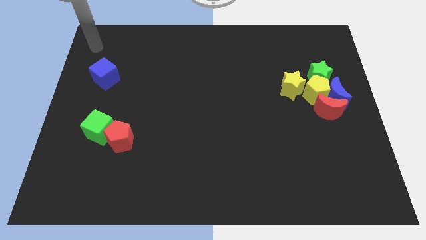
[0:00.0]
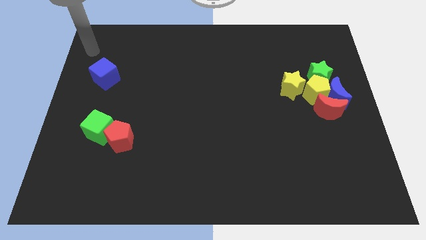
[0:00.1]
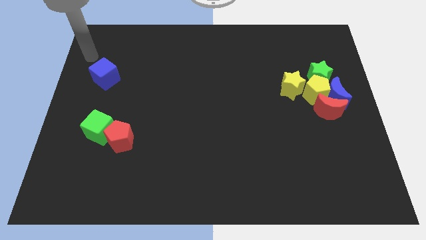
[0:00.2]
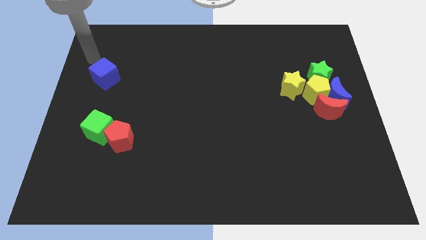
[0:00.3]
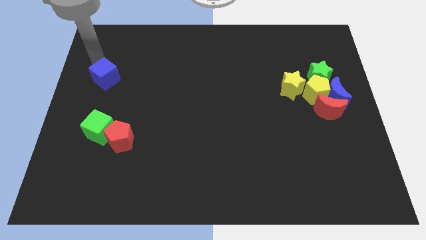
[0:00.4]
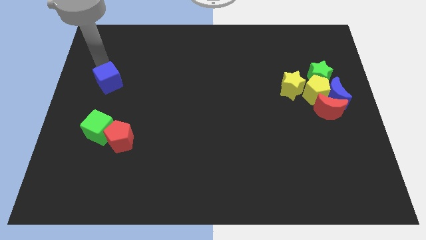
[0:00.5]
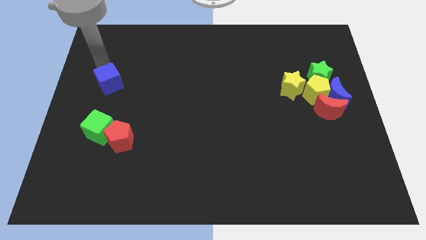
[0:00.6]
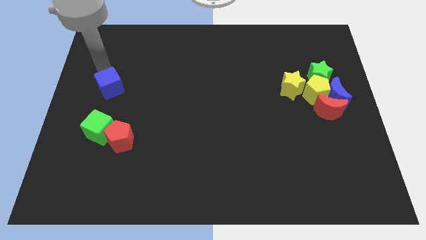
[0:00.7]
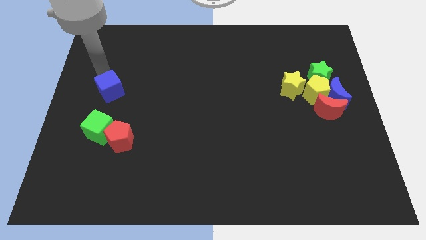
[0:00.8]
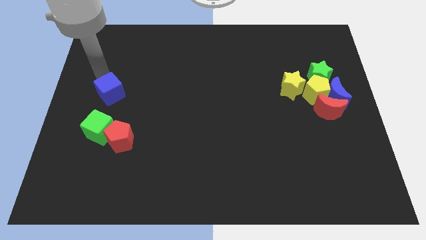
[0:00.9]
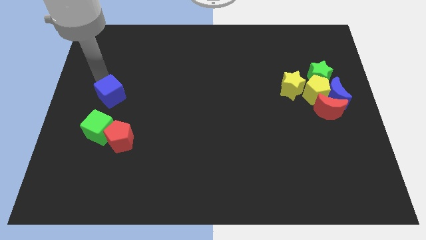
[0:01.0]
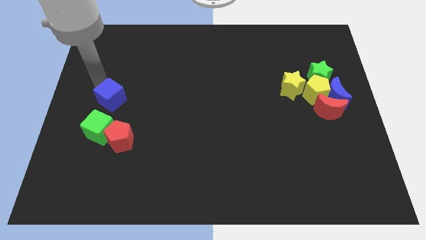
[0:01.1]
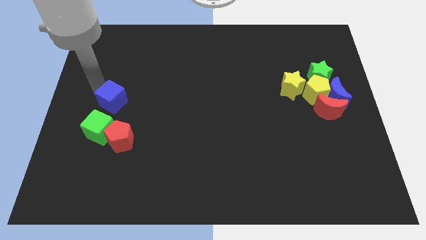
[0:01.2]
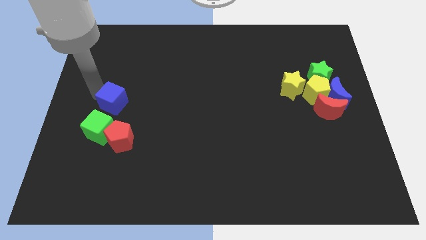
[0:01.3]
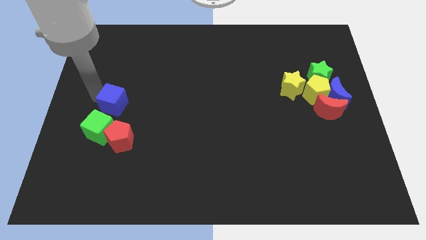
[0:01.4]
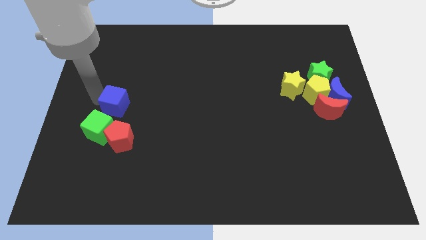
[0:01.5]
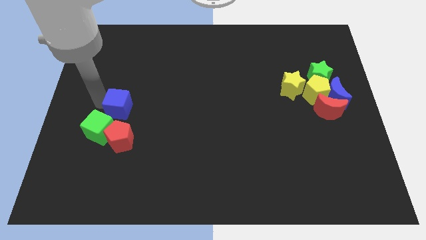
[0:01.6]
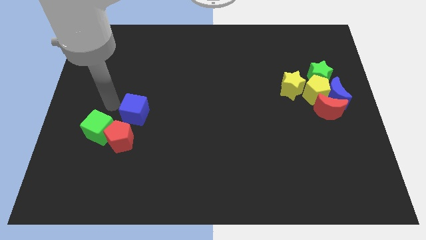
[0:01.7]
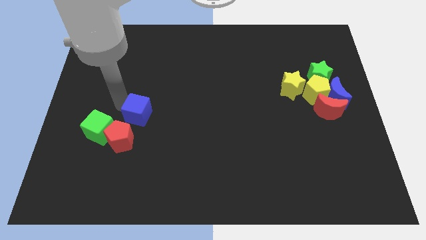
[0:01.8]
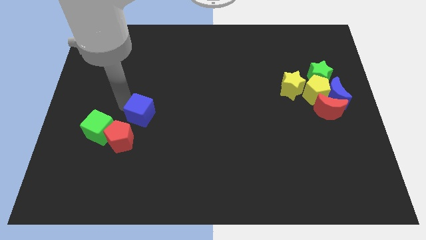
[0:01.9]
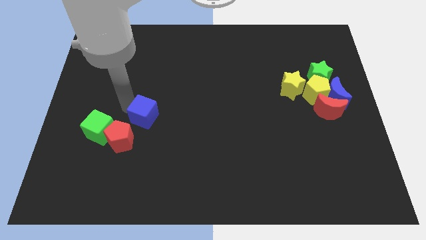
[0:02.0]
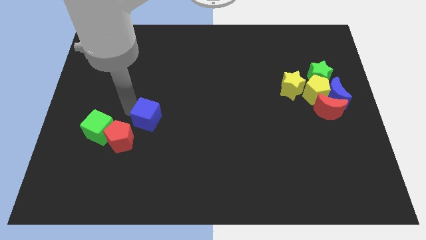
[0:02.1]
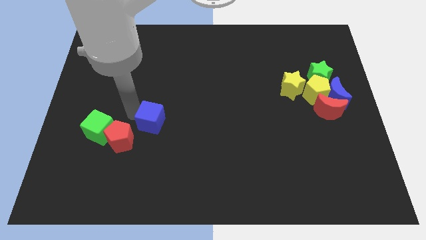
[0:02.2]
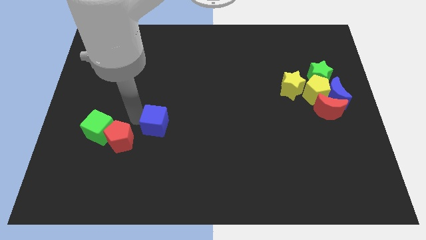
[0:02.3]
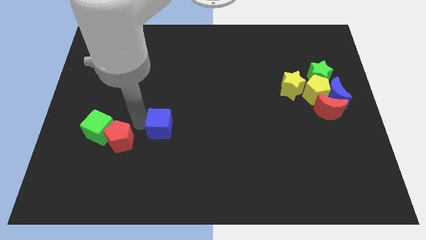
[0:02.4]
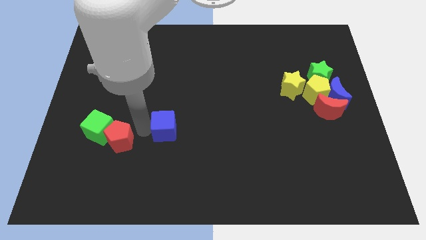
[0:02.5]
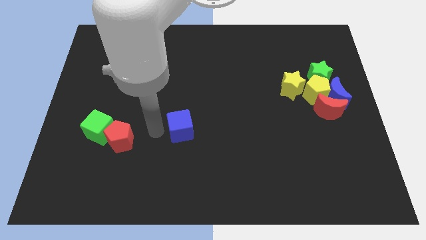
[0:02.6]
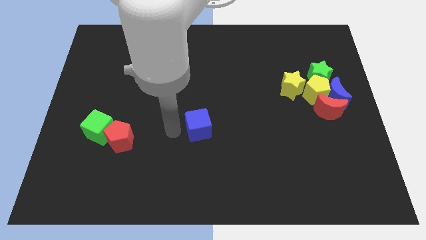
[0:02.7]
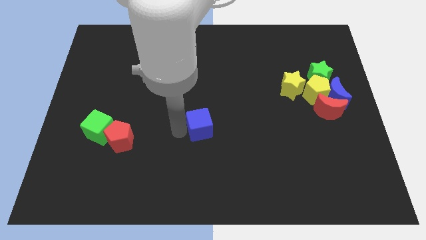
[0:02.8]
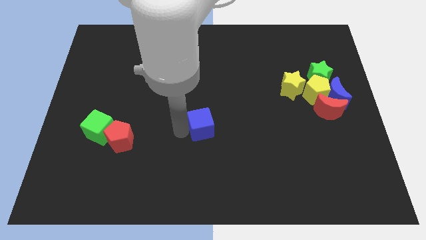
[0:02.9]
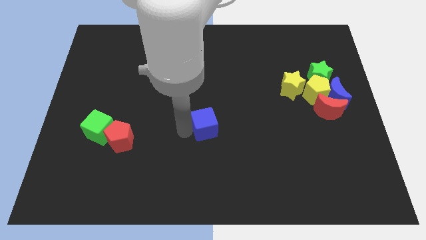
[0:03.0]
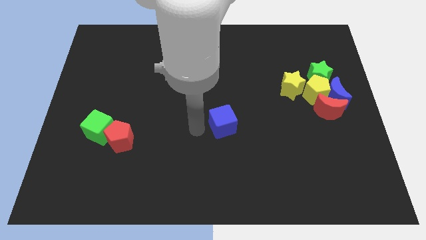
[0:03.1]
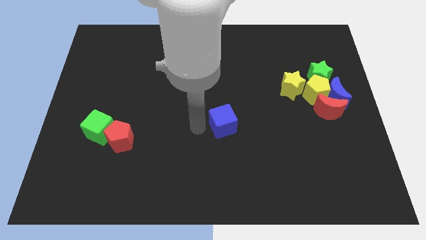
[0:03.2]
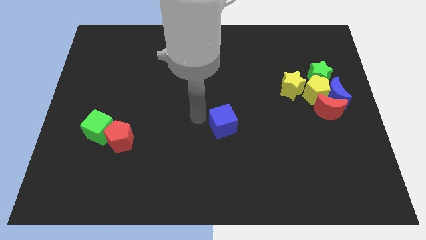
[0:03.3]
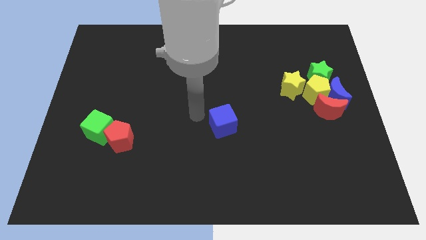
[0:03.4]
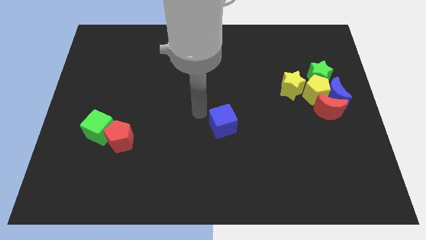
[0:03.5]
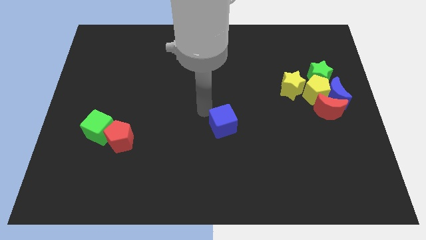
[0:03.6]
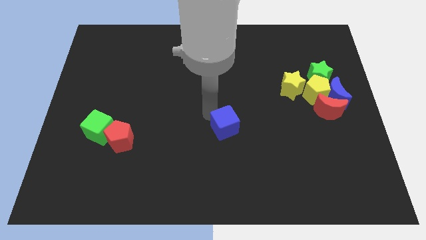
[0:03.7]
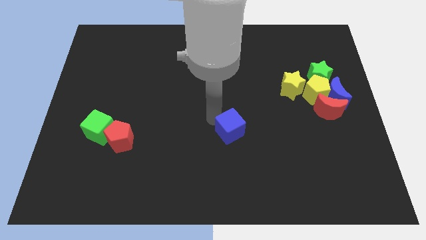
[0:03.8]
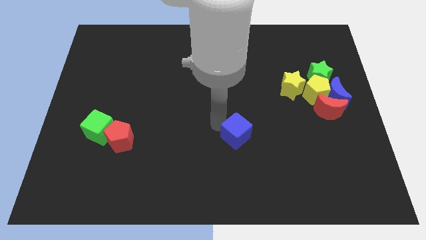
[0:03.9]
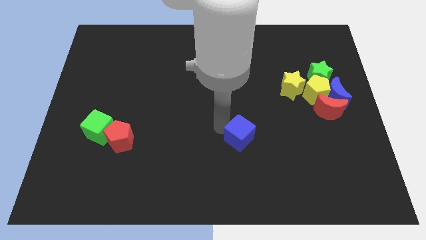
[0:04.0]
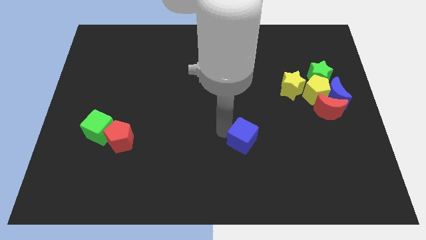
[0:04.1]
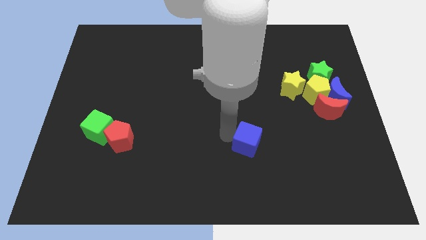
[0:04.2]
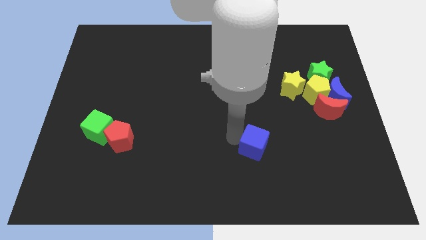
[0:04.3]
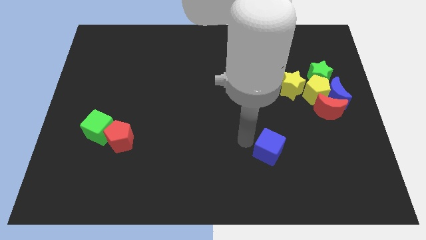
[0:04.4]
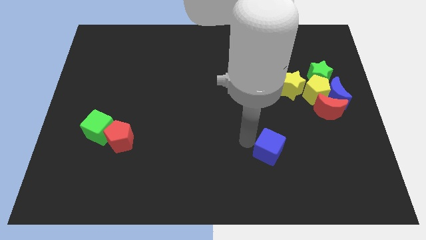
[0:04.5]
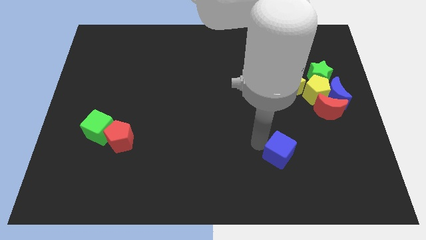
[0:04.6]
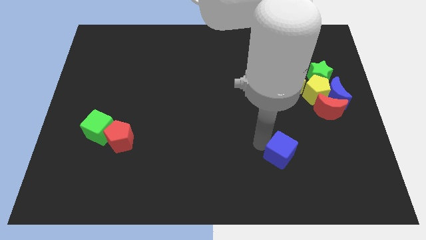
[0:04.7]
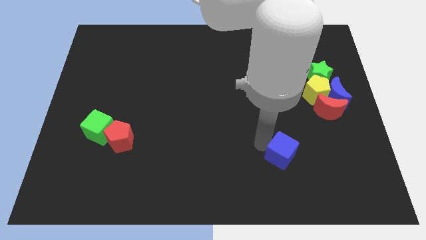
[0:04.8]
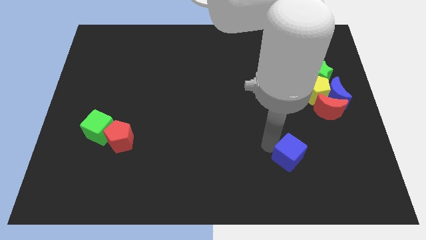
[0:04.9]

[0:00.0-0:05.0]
move the blue cube to the bottom side of the grou pof blocks

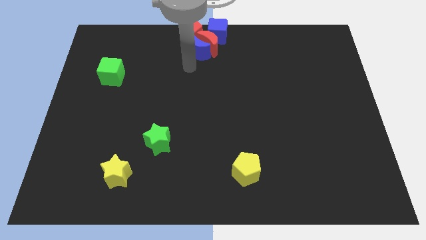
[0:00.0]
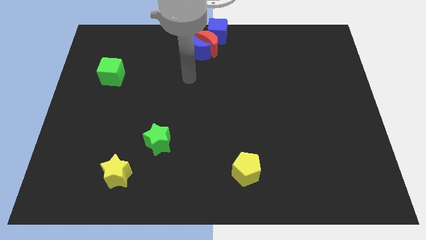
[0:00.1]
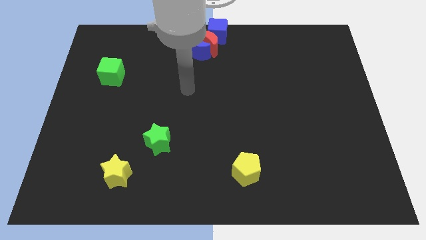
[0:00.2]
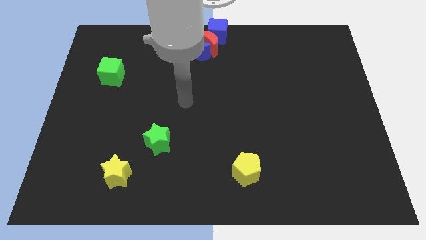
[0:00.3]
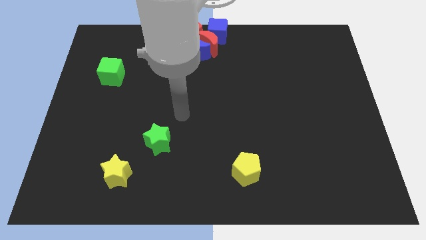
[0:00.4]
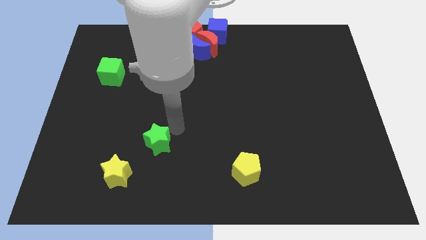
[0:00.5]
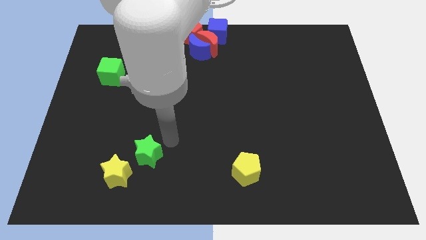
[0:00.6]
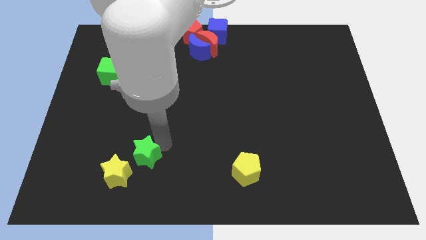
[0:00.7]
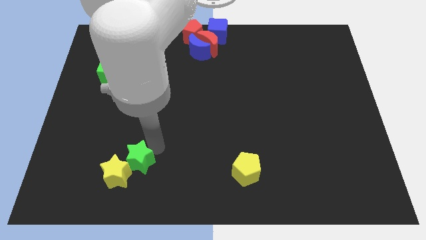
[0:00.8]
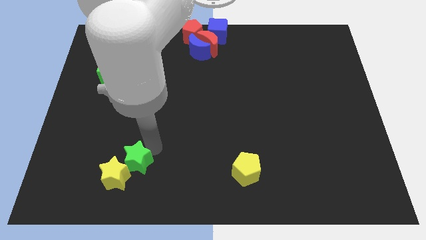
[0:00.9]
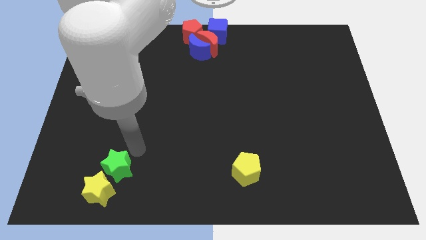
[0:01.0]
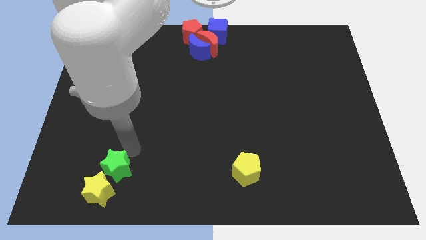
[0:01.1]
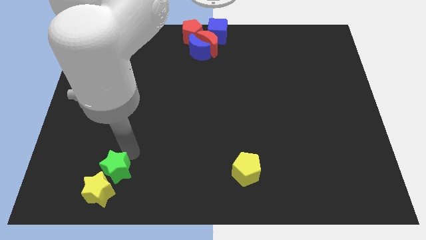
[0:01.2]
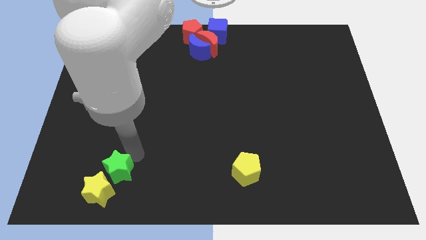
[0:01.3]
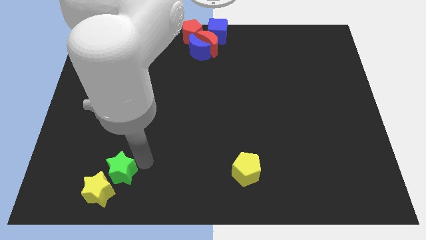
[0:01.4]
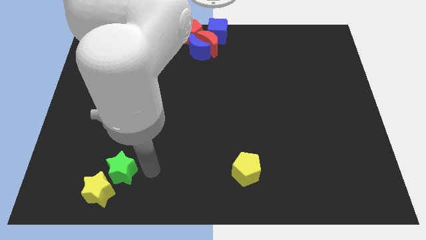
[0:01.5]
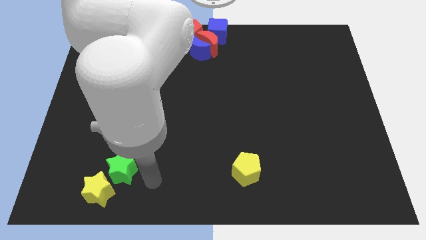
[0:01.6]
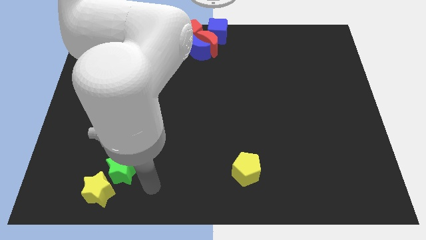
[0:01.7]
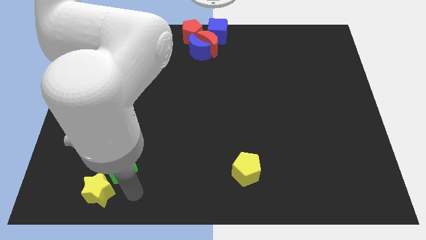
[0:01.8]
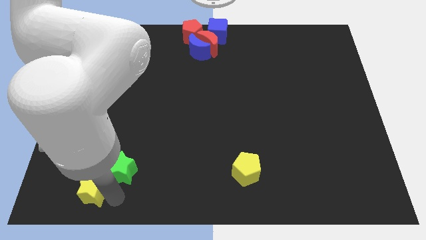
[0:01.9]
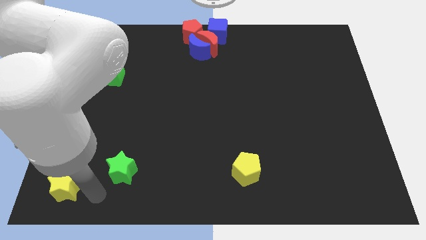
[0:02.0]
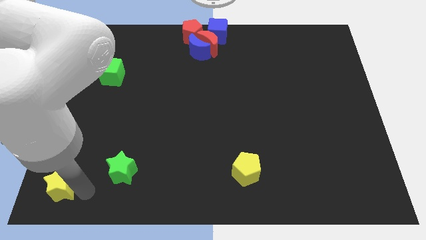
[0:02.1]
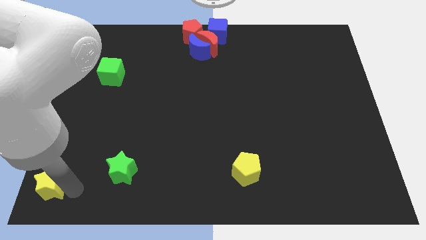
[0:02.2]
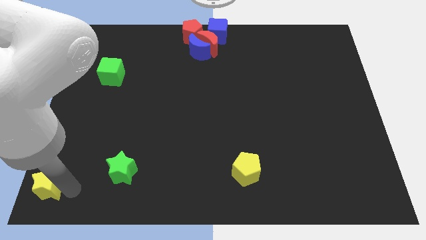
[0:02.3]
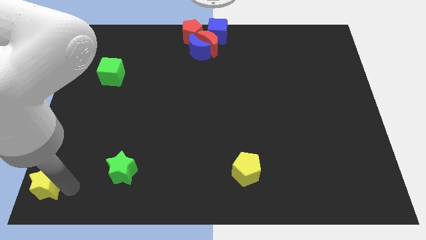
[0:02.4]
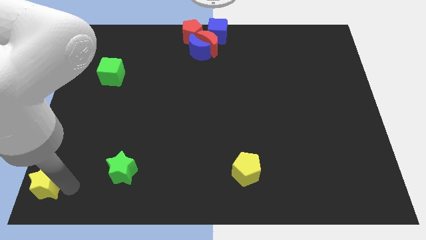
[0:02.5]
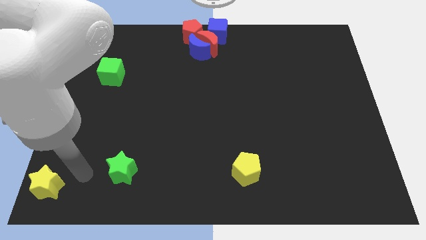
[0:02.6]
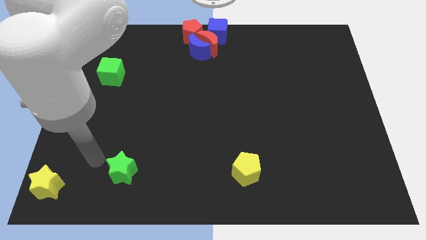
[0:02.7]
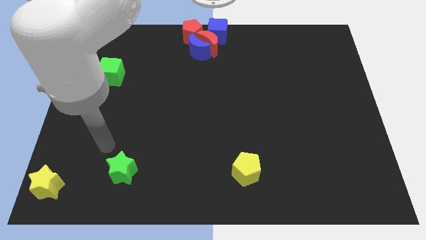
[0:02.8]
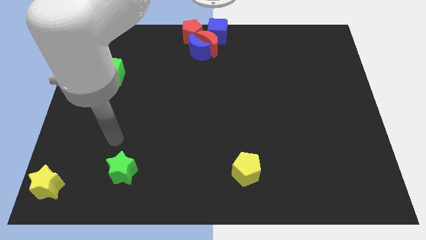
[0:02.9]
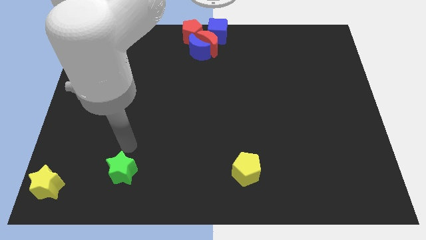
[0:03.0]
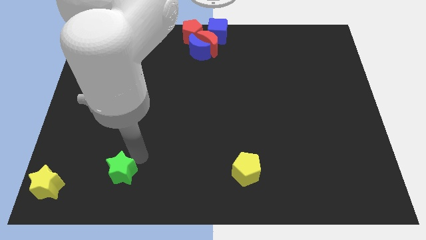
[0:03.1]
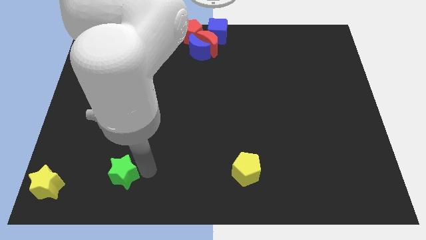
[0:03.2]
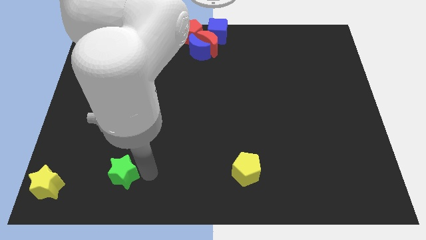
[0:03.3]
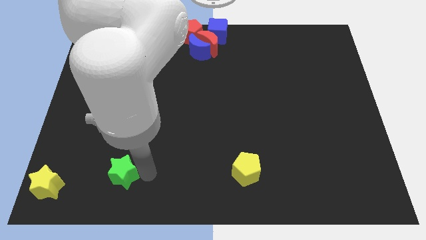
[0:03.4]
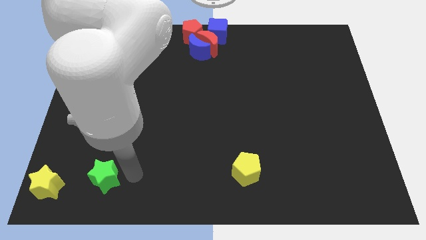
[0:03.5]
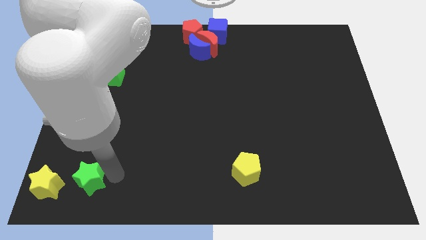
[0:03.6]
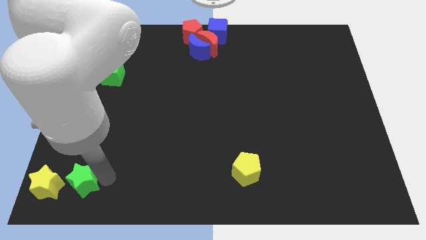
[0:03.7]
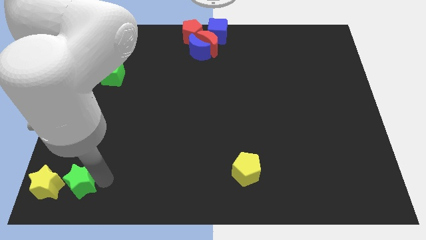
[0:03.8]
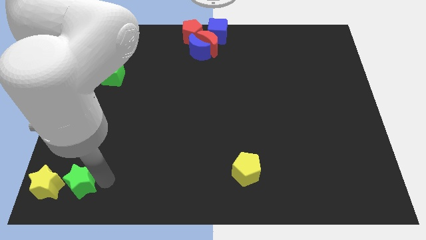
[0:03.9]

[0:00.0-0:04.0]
push the stars towards the bottom left corner of the board
